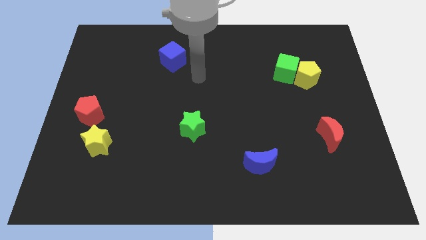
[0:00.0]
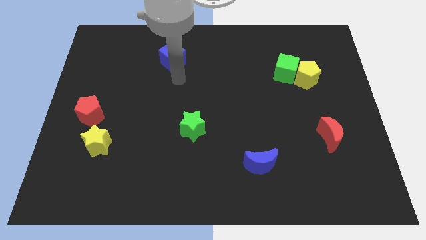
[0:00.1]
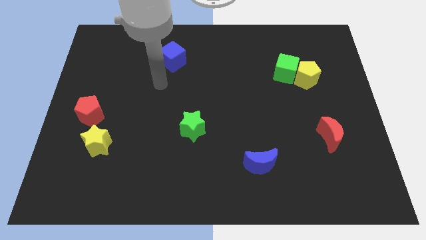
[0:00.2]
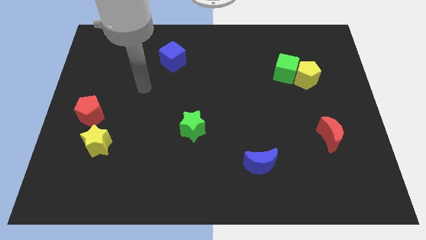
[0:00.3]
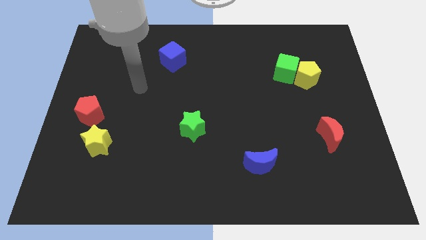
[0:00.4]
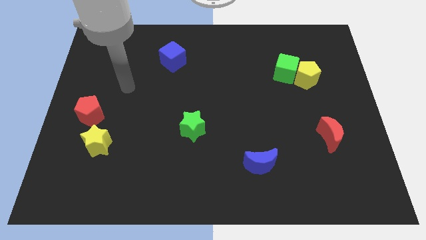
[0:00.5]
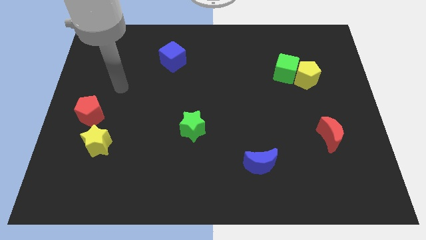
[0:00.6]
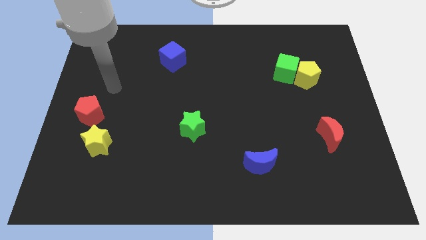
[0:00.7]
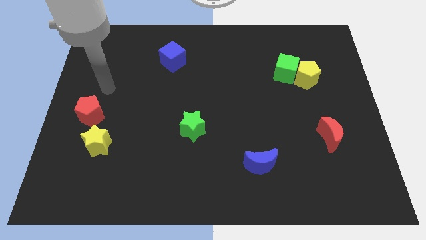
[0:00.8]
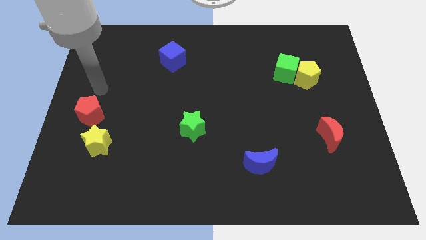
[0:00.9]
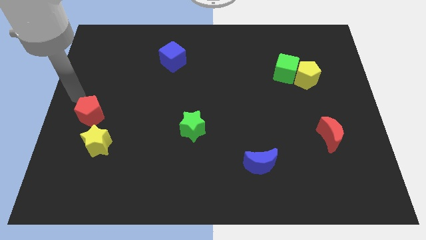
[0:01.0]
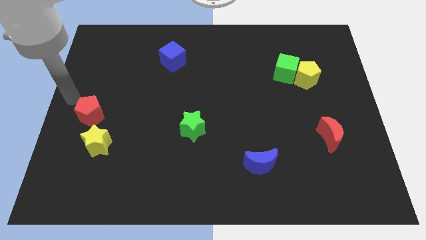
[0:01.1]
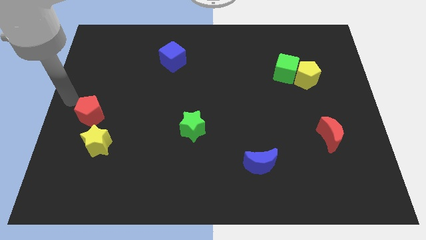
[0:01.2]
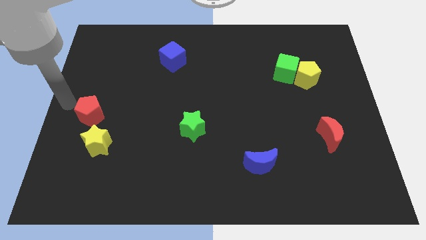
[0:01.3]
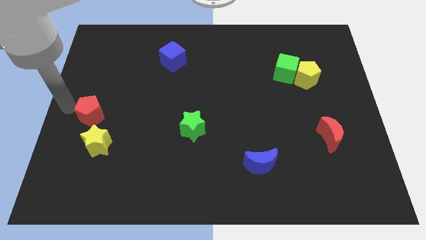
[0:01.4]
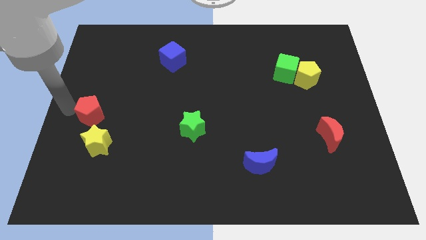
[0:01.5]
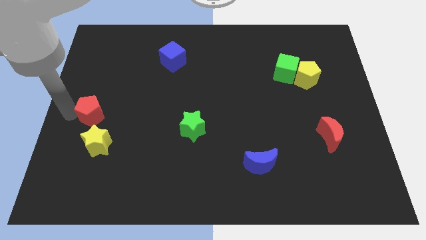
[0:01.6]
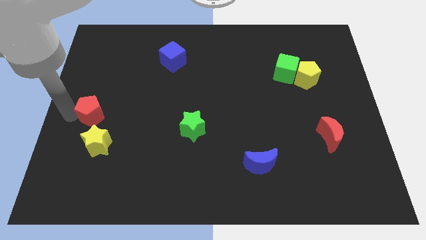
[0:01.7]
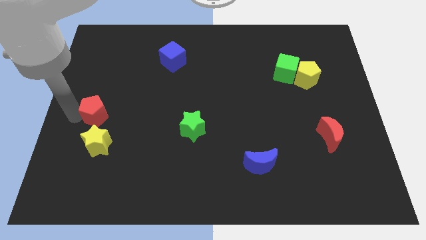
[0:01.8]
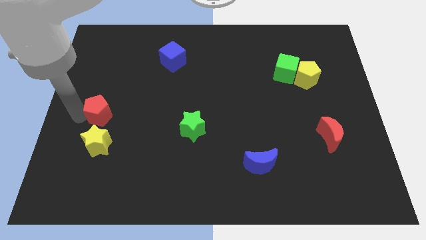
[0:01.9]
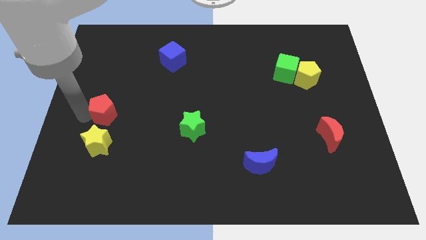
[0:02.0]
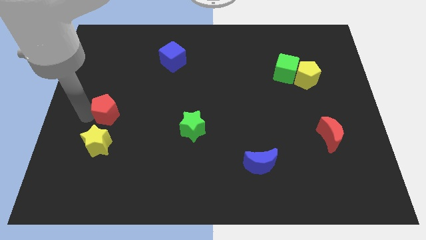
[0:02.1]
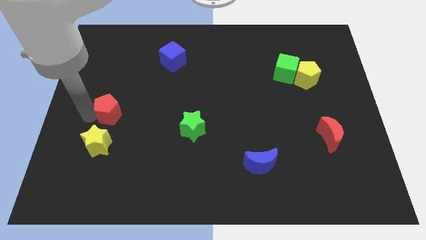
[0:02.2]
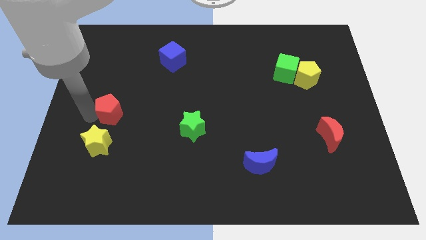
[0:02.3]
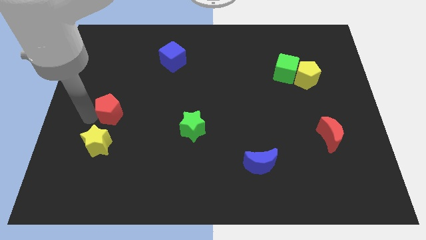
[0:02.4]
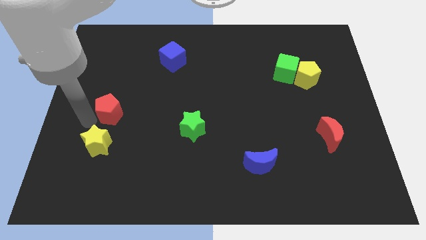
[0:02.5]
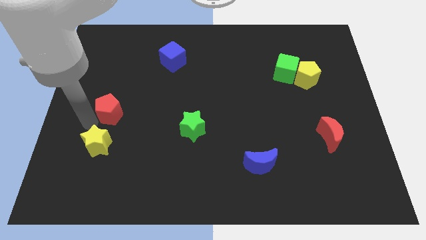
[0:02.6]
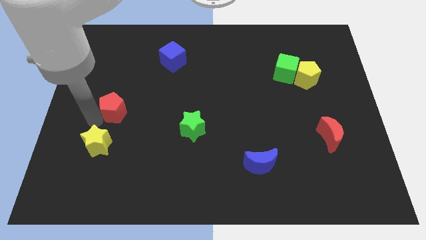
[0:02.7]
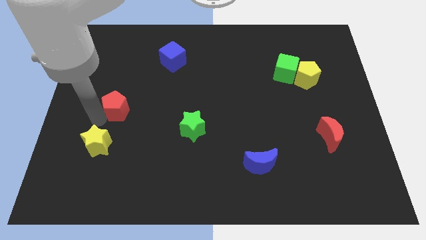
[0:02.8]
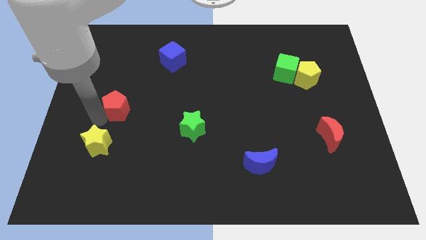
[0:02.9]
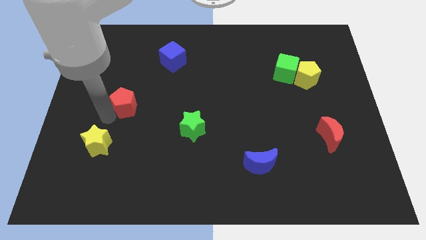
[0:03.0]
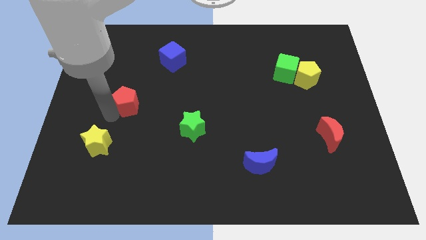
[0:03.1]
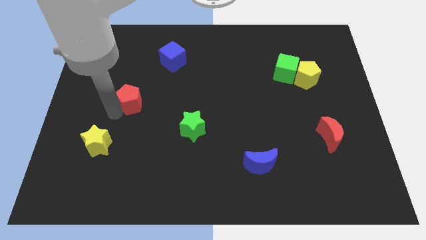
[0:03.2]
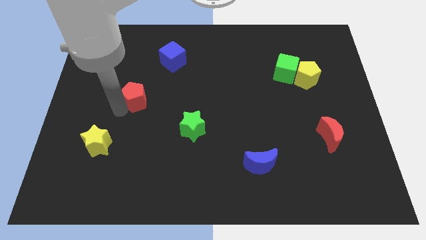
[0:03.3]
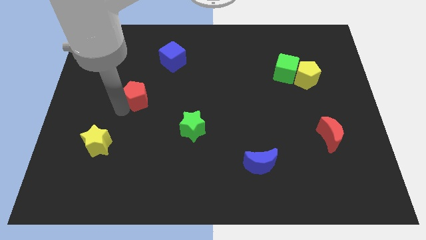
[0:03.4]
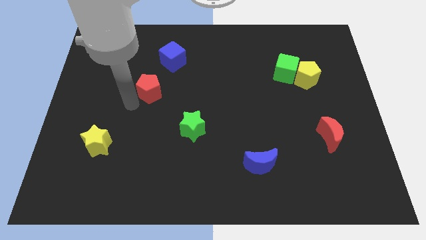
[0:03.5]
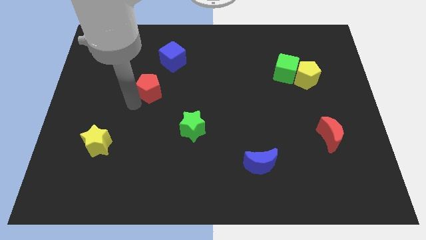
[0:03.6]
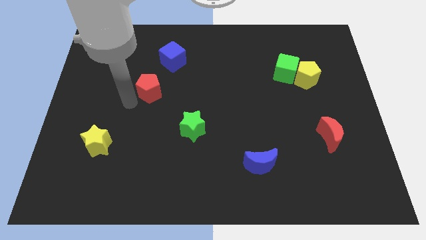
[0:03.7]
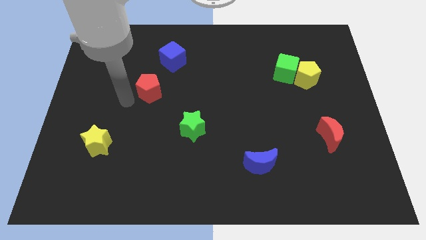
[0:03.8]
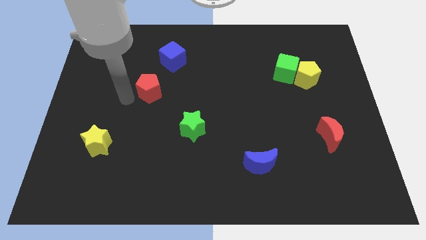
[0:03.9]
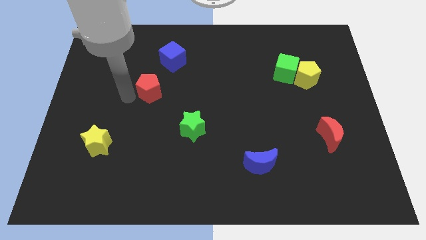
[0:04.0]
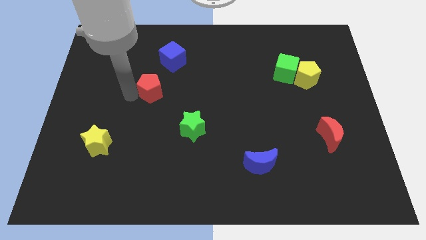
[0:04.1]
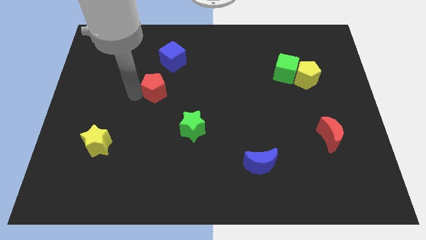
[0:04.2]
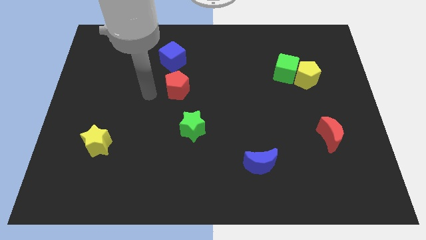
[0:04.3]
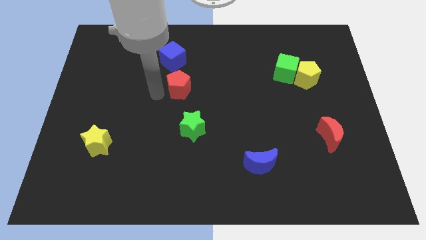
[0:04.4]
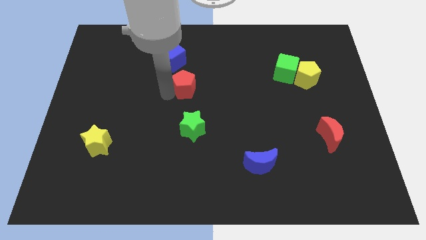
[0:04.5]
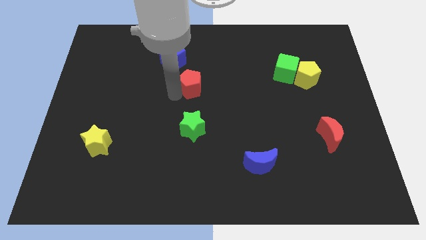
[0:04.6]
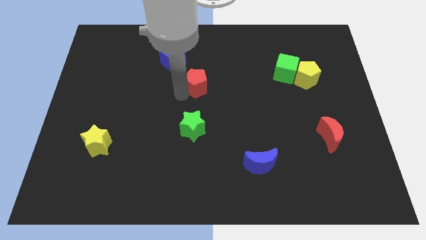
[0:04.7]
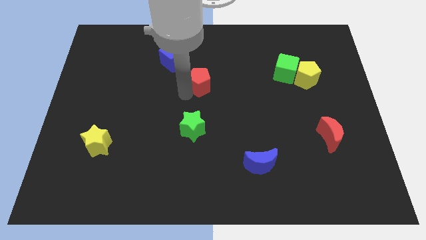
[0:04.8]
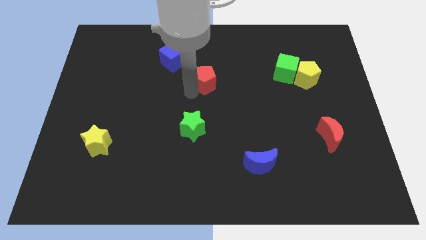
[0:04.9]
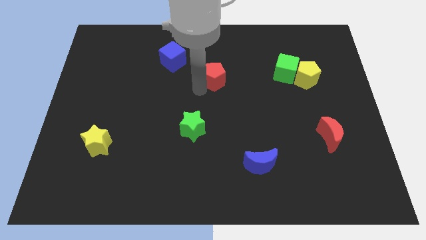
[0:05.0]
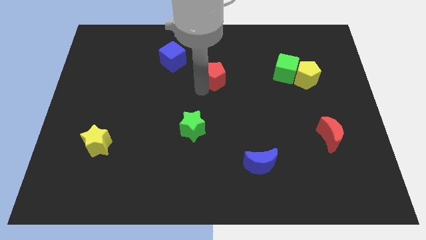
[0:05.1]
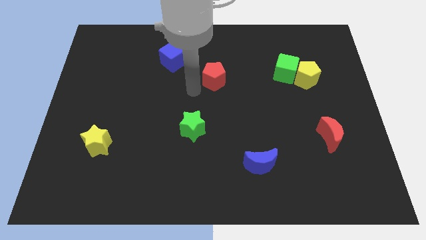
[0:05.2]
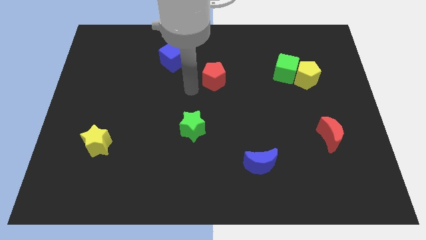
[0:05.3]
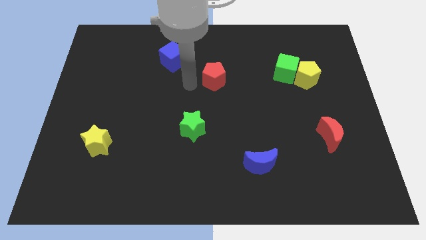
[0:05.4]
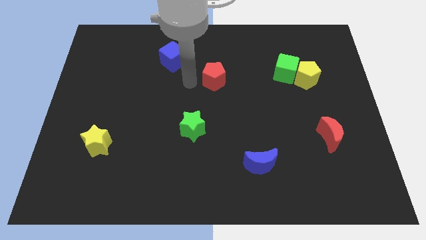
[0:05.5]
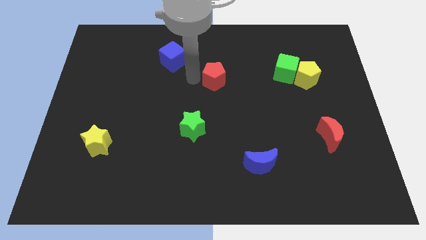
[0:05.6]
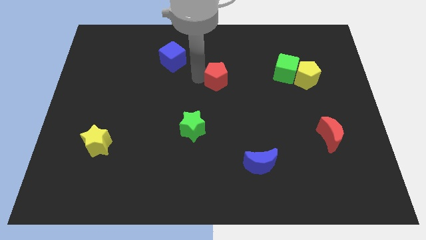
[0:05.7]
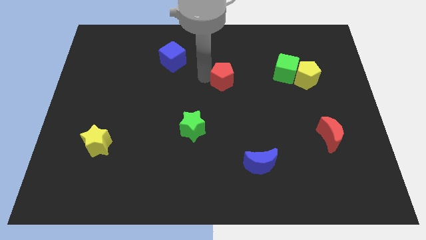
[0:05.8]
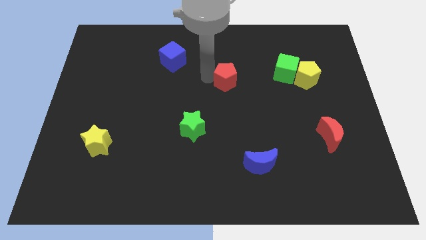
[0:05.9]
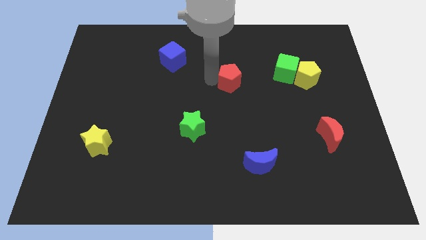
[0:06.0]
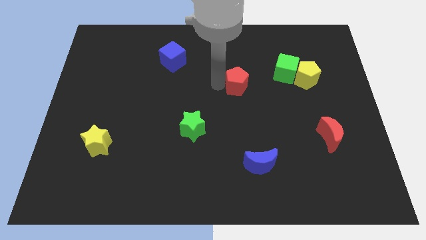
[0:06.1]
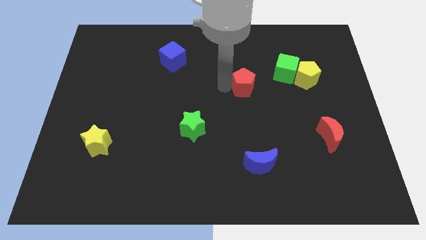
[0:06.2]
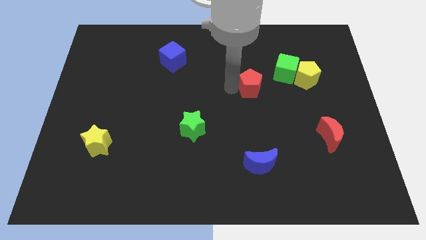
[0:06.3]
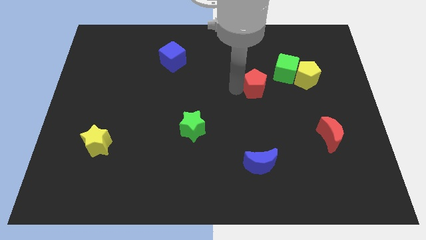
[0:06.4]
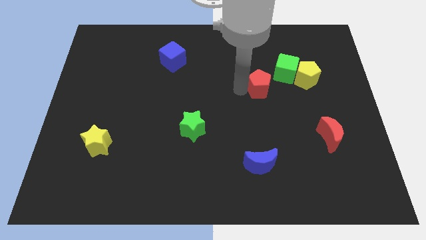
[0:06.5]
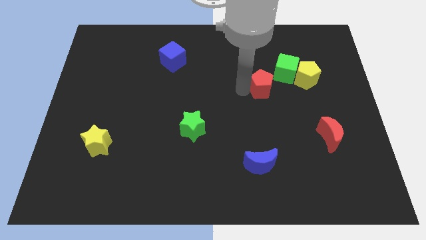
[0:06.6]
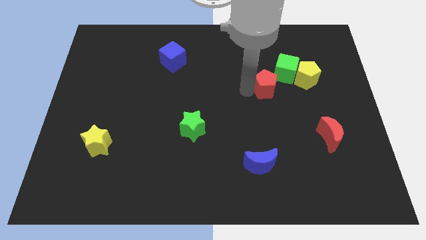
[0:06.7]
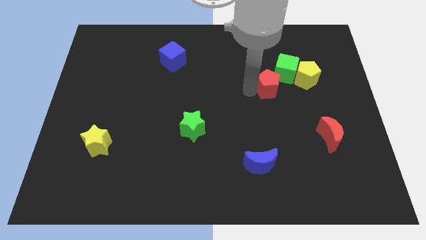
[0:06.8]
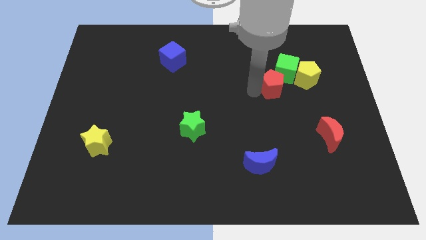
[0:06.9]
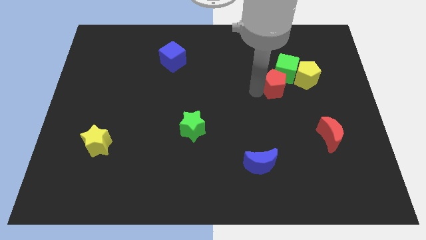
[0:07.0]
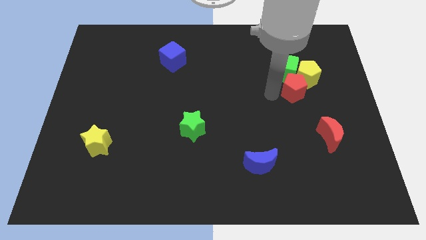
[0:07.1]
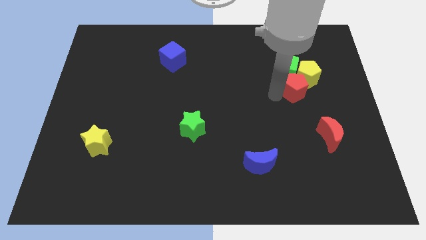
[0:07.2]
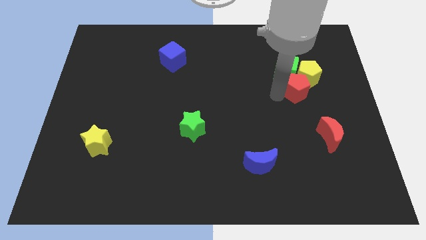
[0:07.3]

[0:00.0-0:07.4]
push the red pentagon towards the yellow pentagon

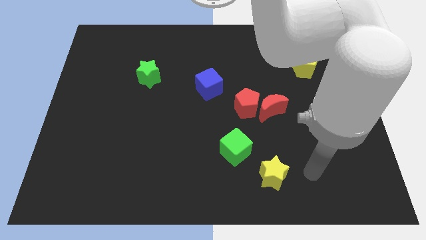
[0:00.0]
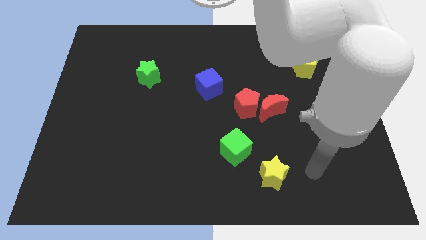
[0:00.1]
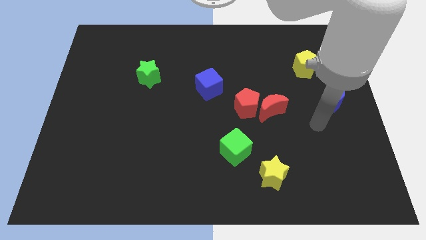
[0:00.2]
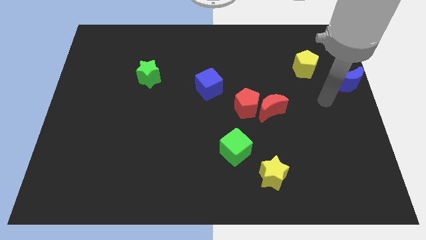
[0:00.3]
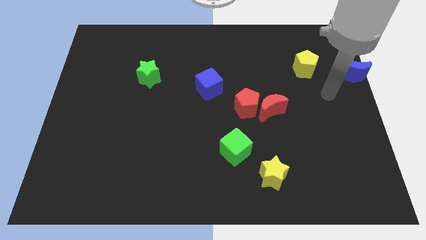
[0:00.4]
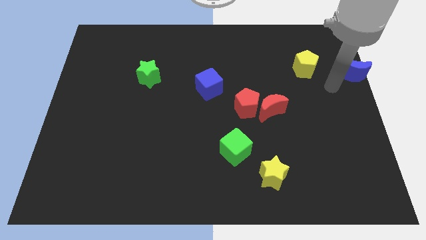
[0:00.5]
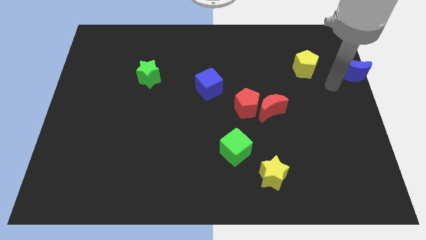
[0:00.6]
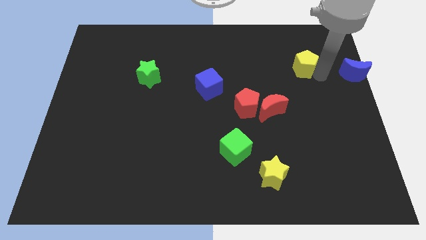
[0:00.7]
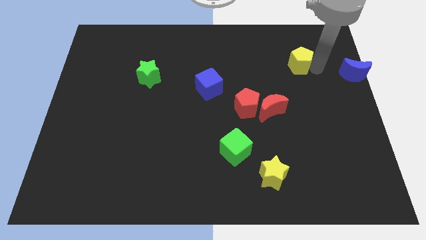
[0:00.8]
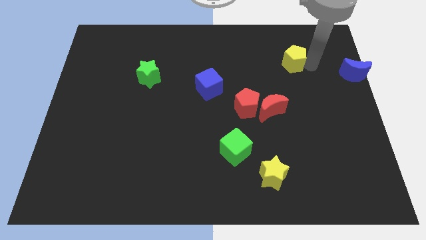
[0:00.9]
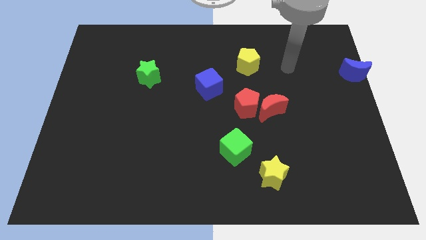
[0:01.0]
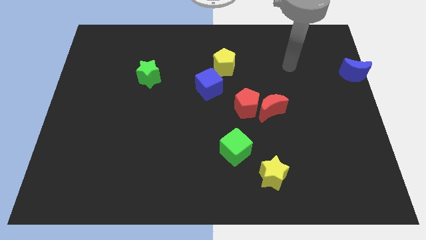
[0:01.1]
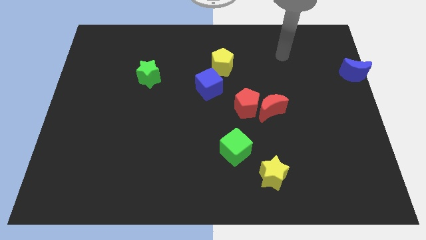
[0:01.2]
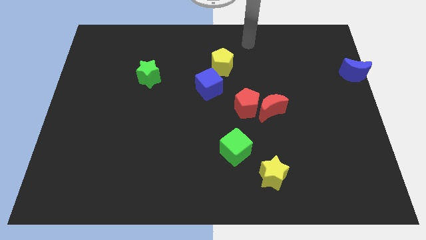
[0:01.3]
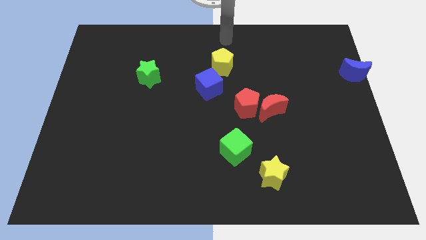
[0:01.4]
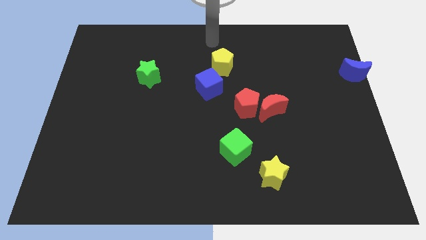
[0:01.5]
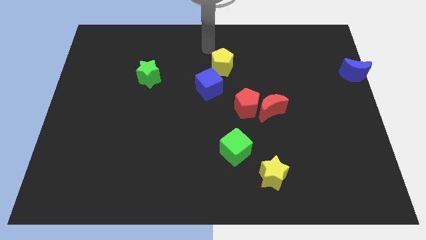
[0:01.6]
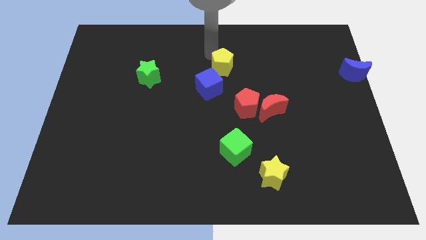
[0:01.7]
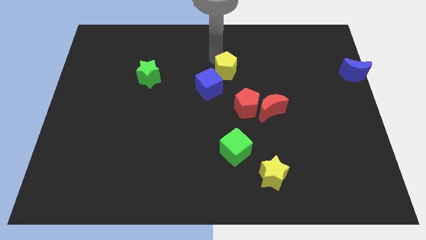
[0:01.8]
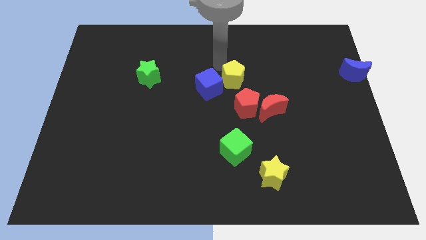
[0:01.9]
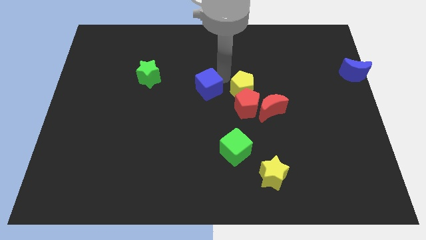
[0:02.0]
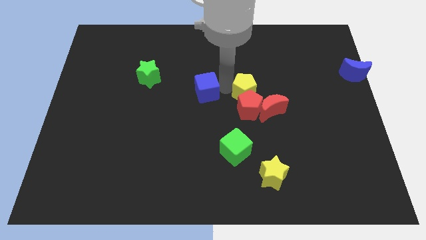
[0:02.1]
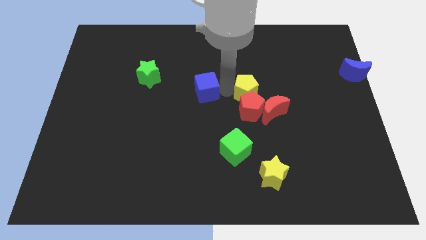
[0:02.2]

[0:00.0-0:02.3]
push the yellow pentagon next to the red pentagon
